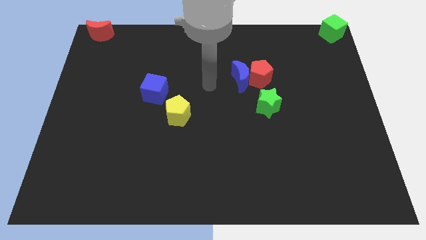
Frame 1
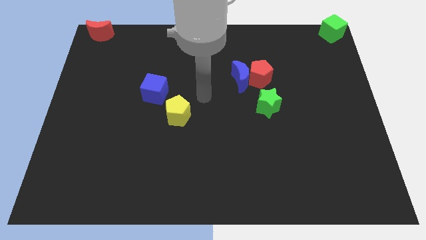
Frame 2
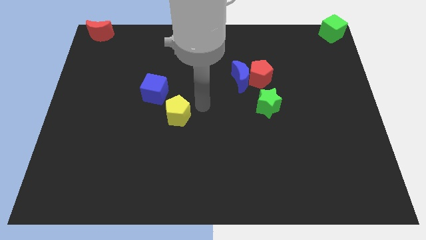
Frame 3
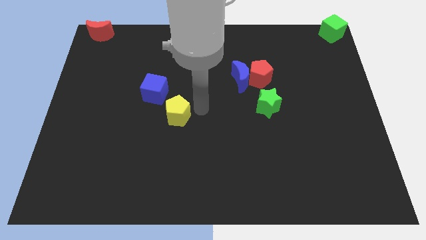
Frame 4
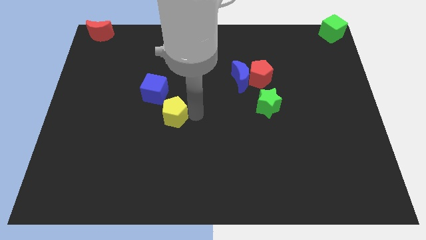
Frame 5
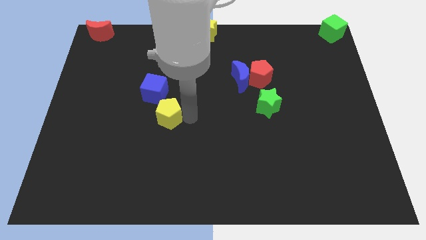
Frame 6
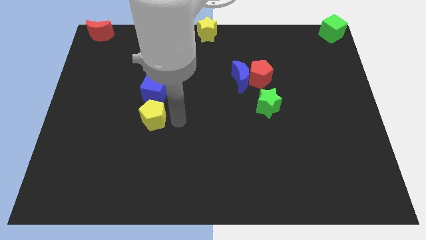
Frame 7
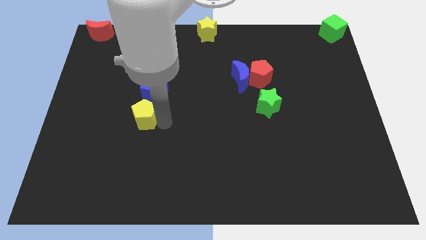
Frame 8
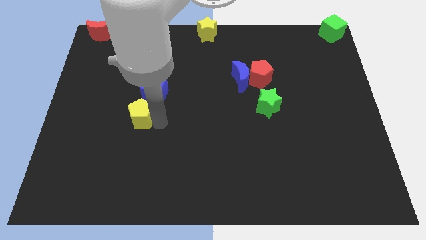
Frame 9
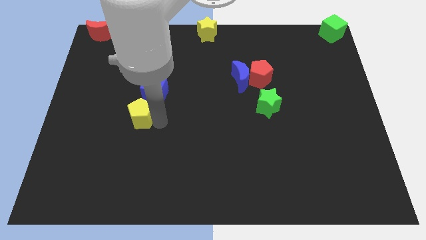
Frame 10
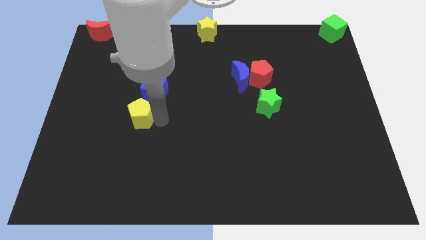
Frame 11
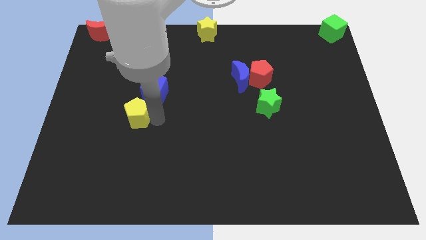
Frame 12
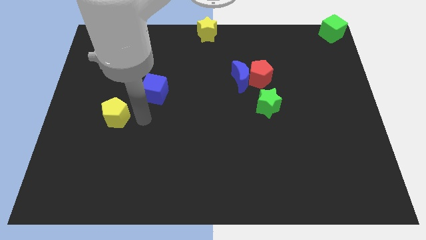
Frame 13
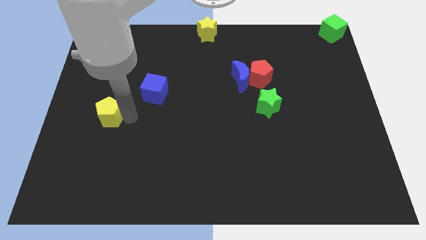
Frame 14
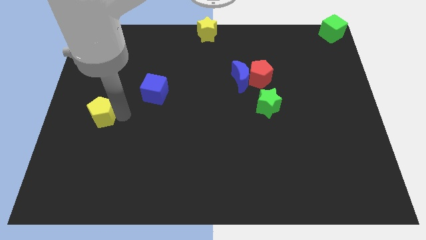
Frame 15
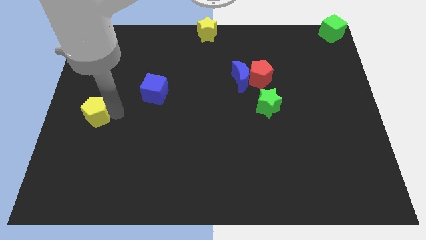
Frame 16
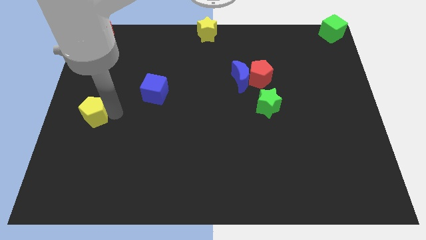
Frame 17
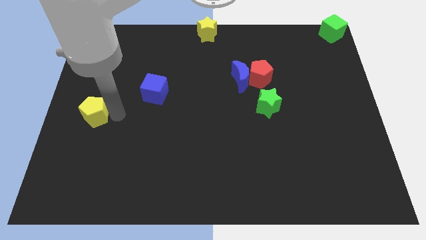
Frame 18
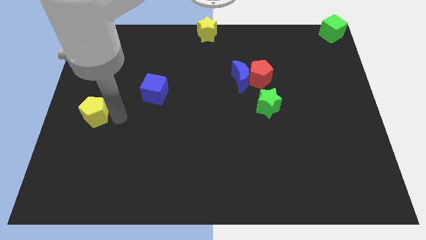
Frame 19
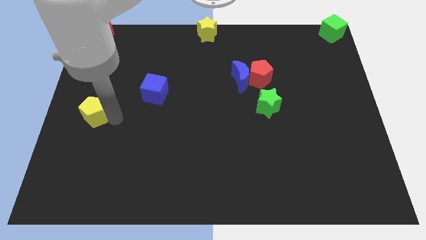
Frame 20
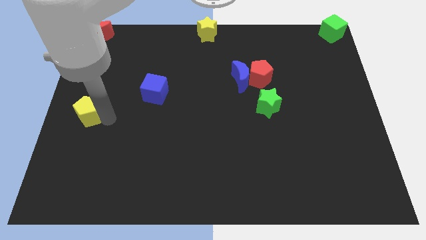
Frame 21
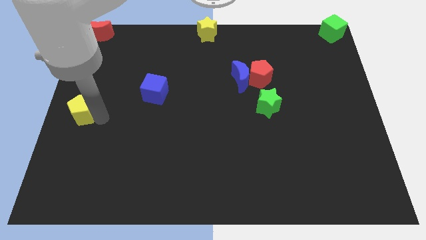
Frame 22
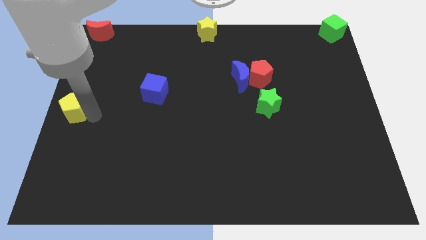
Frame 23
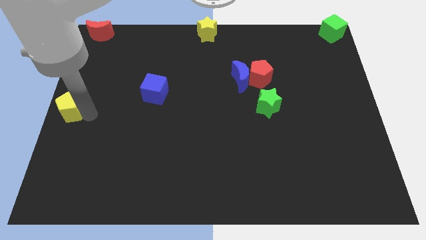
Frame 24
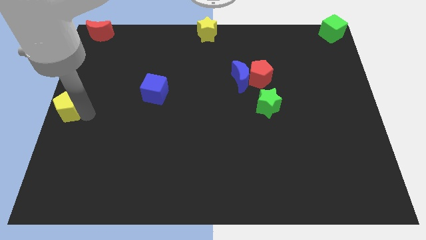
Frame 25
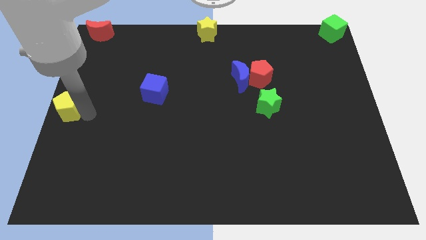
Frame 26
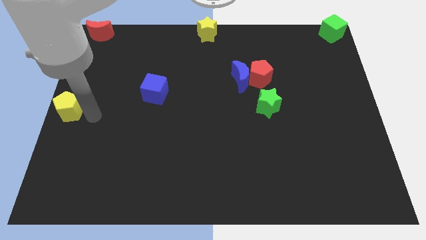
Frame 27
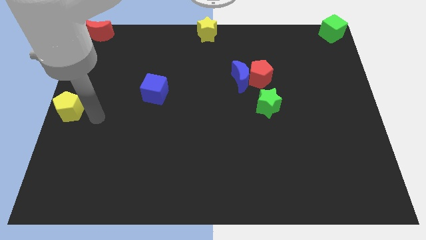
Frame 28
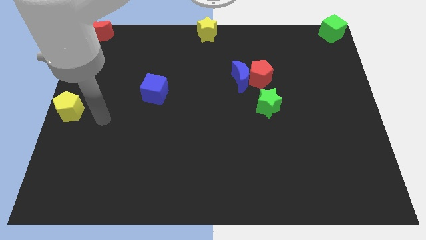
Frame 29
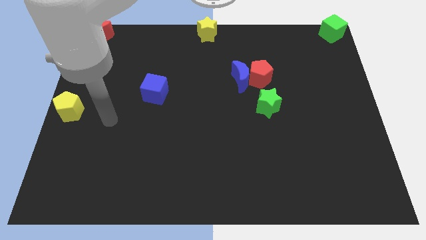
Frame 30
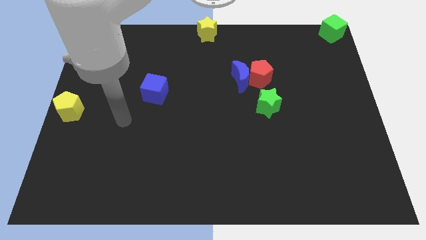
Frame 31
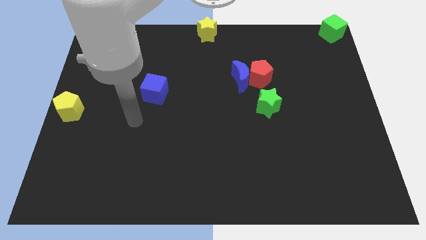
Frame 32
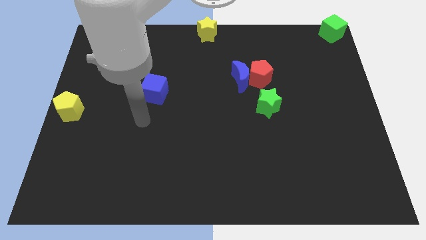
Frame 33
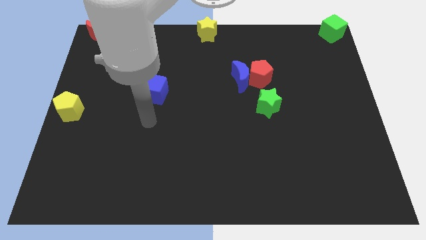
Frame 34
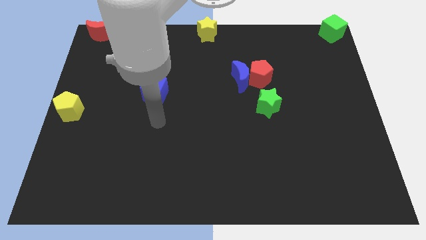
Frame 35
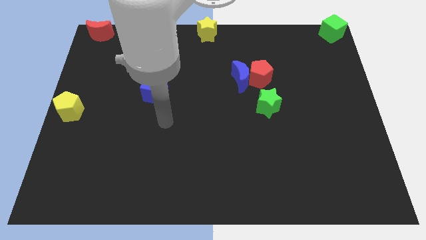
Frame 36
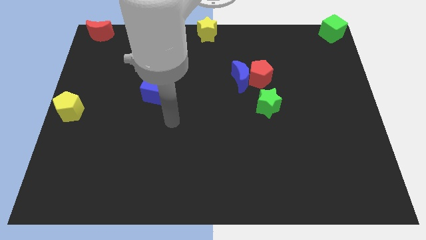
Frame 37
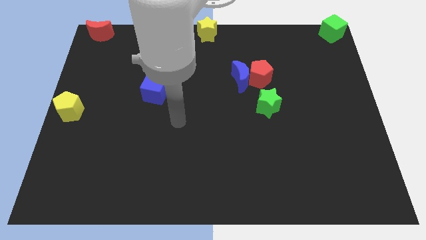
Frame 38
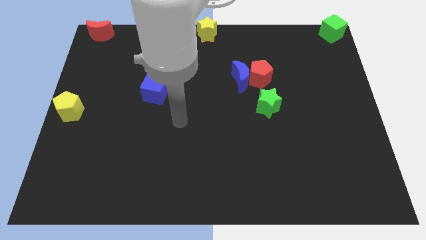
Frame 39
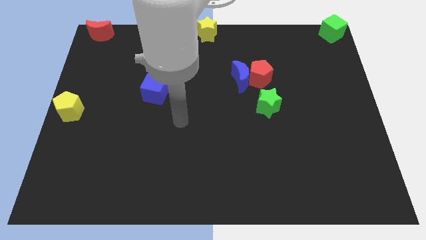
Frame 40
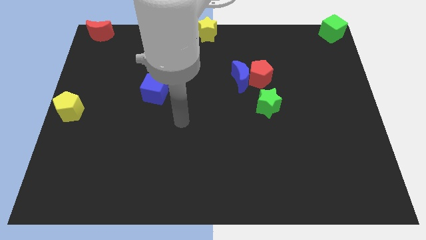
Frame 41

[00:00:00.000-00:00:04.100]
slide the yellow pentagon at the center left side

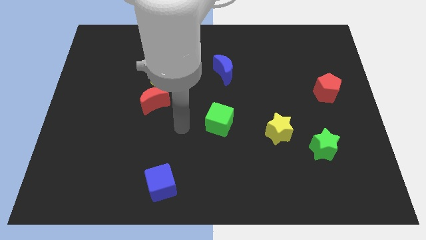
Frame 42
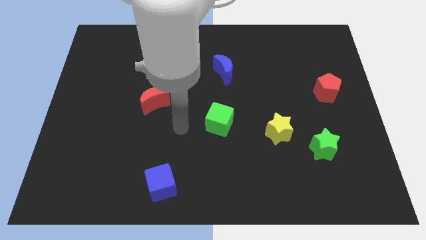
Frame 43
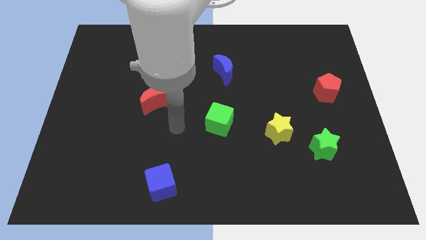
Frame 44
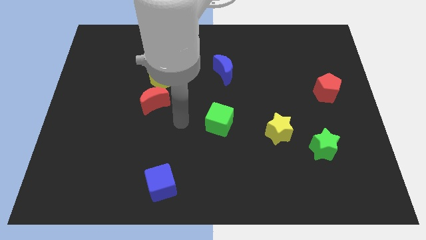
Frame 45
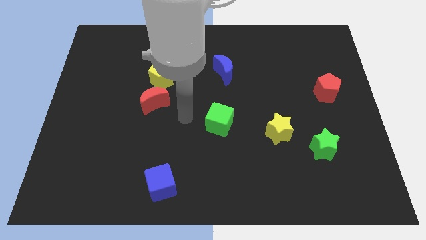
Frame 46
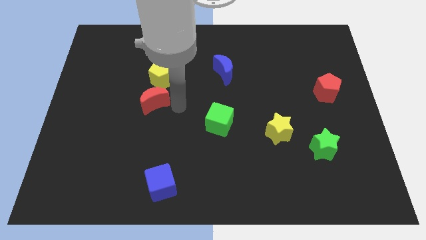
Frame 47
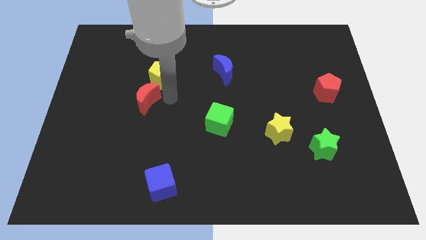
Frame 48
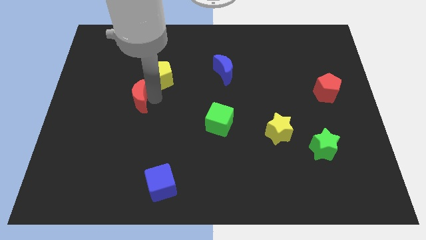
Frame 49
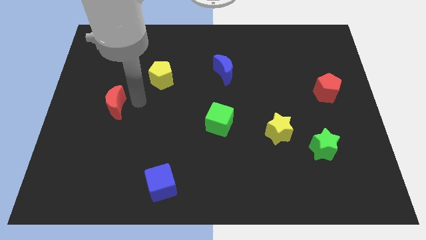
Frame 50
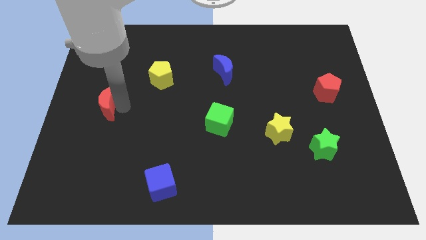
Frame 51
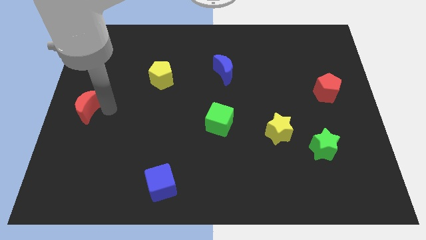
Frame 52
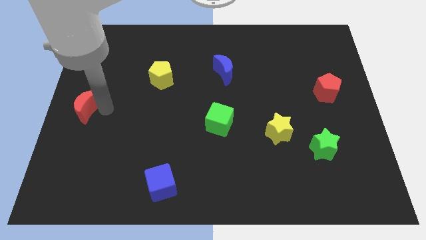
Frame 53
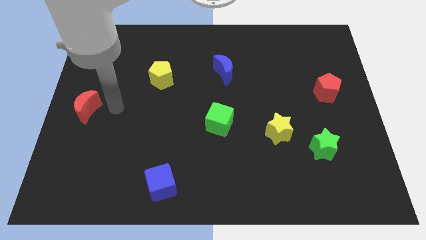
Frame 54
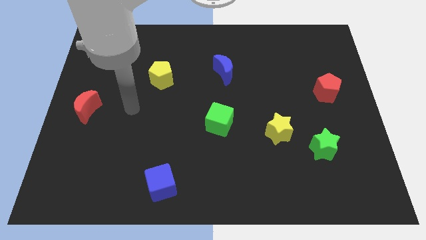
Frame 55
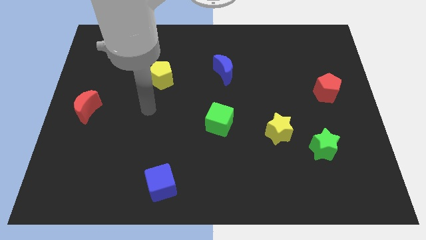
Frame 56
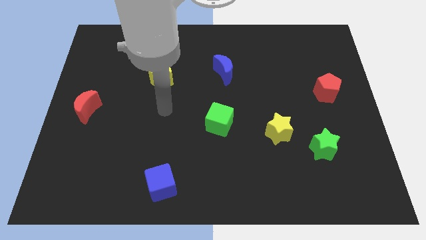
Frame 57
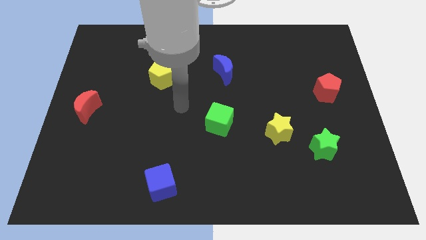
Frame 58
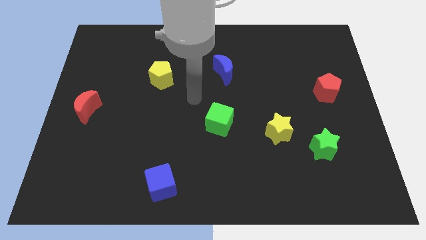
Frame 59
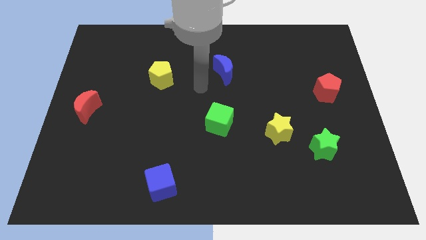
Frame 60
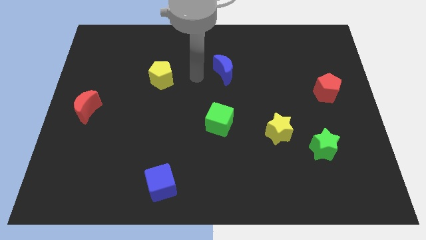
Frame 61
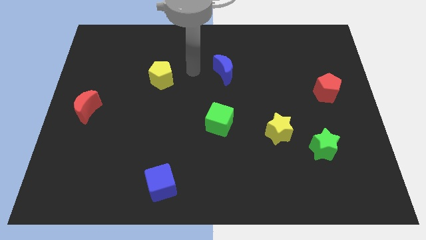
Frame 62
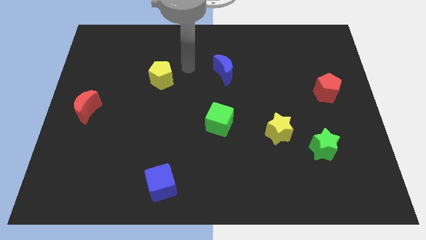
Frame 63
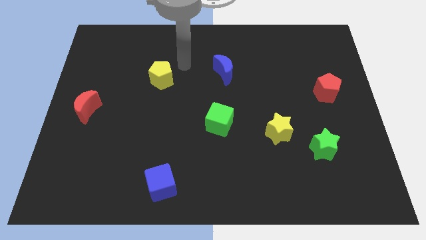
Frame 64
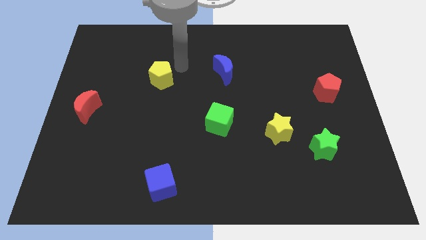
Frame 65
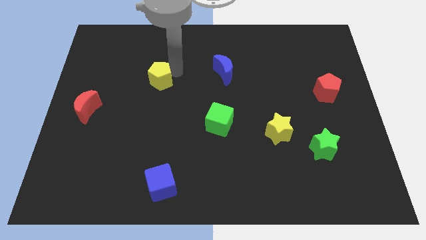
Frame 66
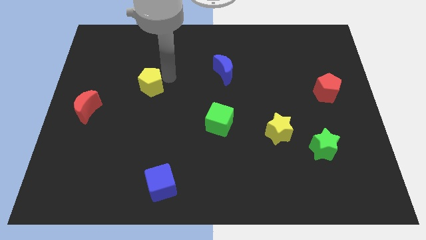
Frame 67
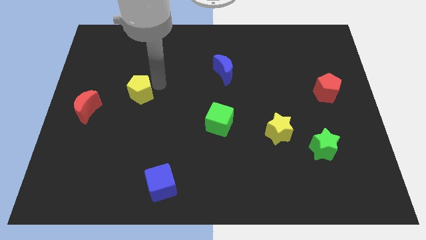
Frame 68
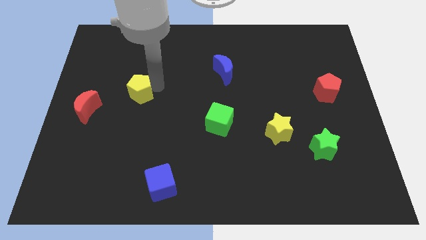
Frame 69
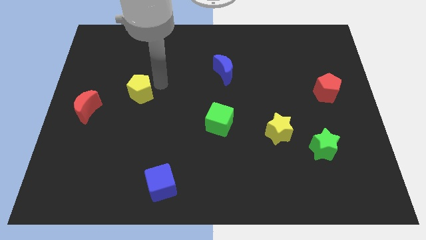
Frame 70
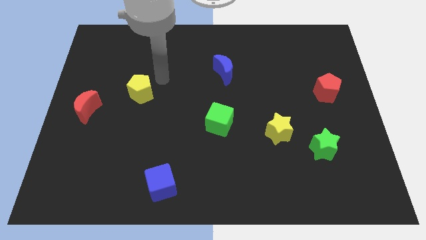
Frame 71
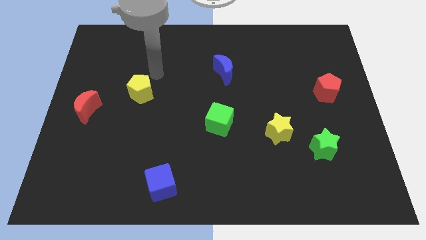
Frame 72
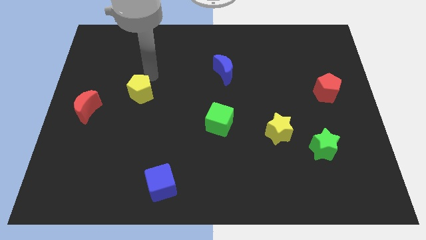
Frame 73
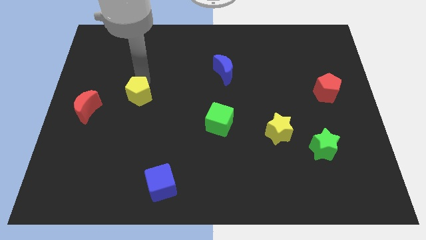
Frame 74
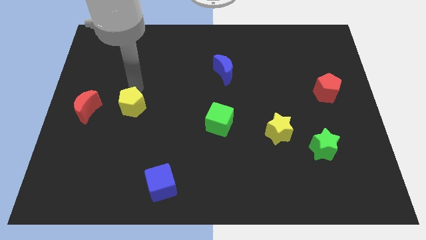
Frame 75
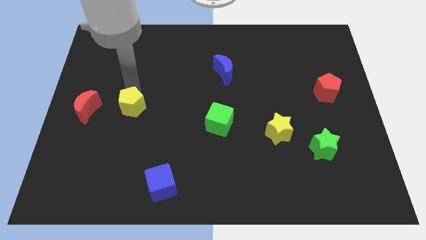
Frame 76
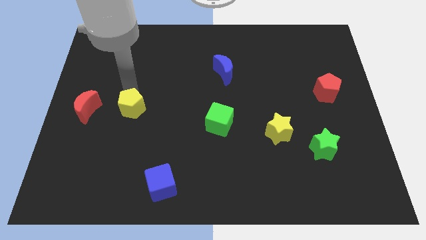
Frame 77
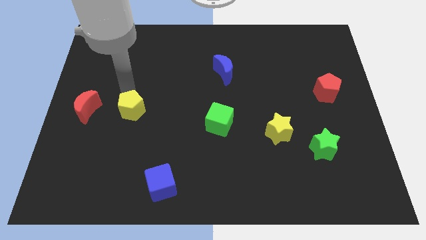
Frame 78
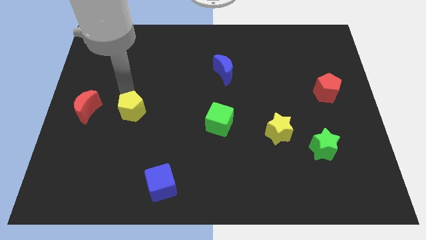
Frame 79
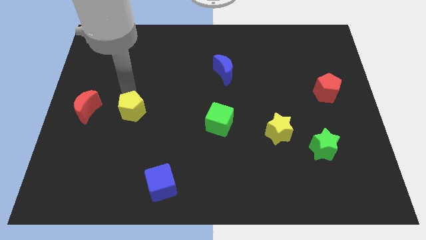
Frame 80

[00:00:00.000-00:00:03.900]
place yellow pentagon to the right of red moon

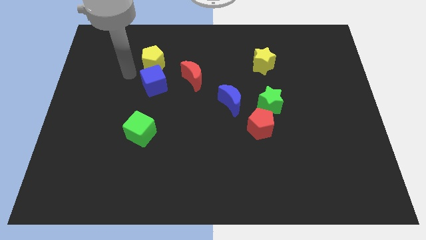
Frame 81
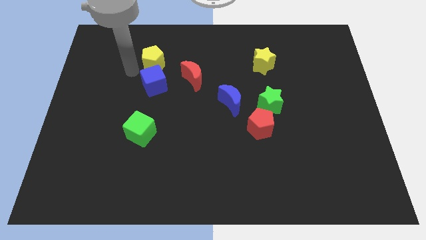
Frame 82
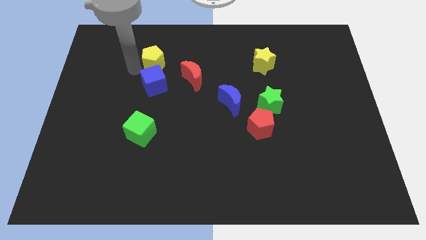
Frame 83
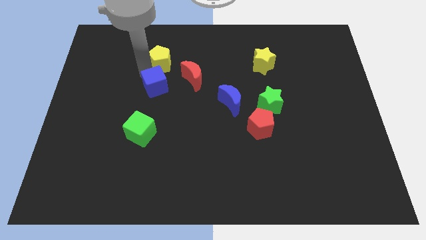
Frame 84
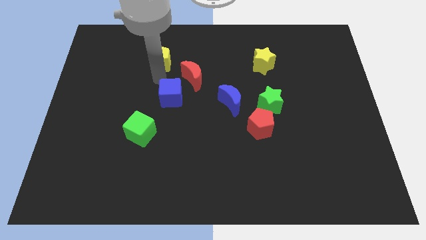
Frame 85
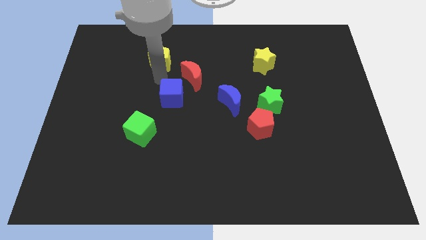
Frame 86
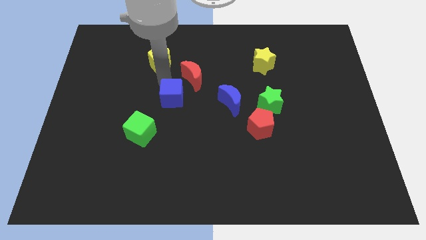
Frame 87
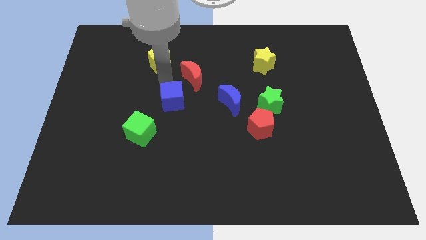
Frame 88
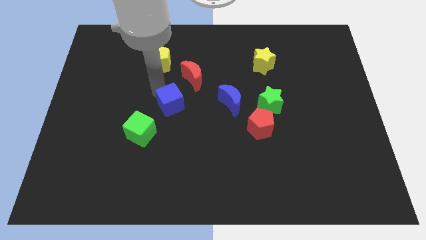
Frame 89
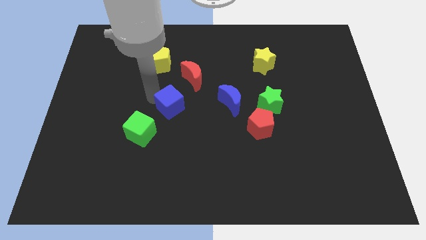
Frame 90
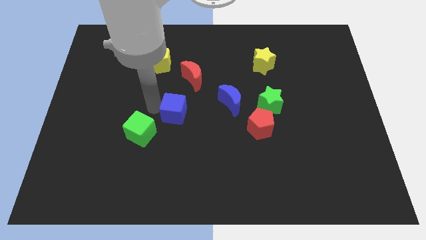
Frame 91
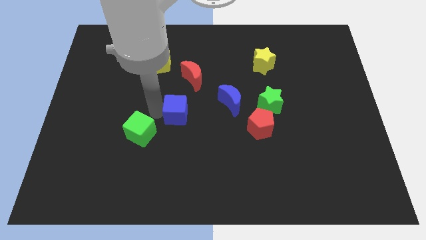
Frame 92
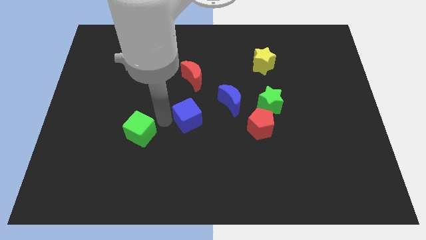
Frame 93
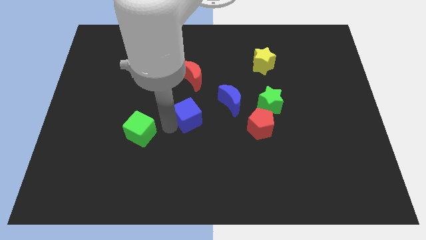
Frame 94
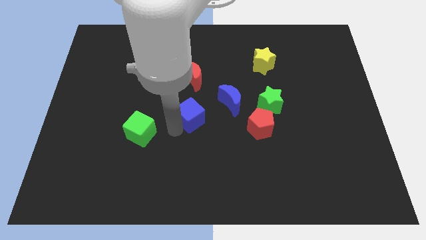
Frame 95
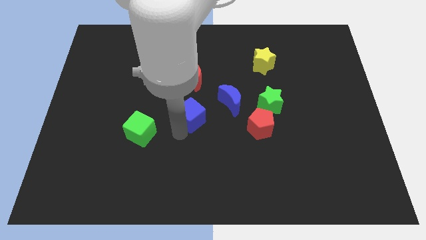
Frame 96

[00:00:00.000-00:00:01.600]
separate the blue cube from the yellow pentagon
